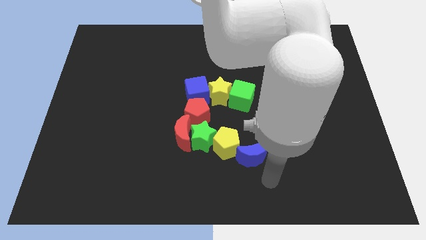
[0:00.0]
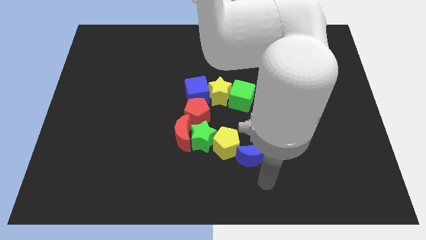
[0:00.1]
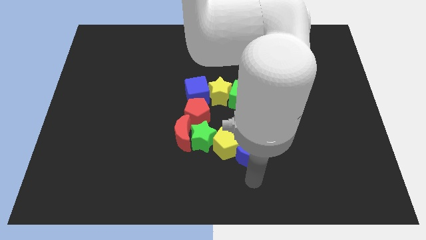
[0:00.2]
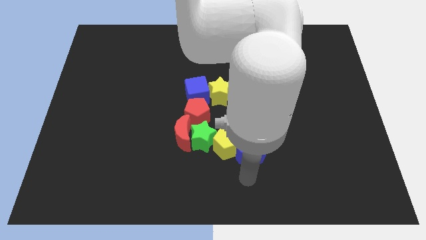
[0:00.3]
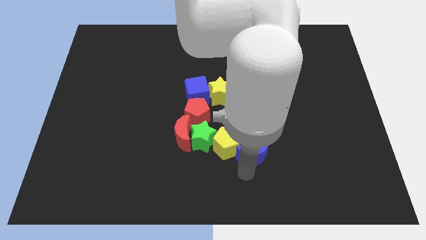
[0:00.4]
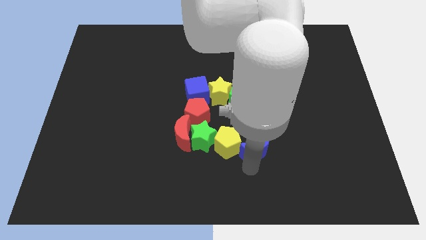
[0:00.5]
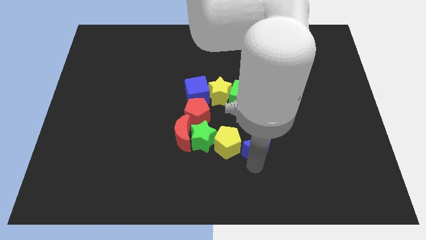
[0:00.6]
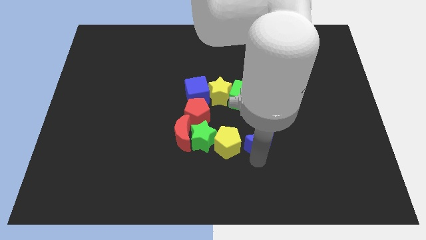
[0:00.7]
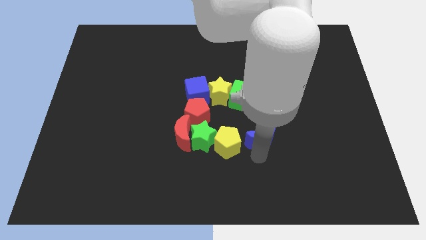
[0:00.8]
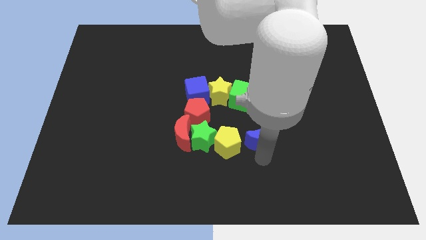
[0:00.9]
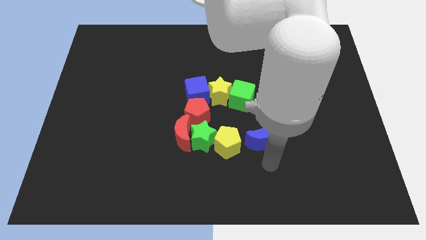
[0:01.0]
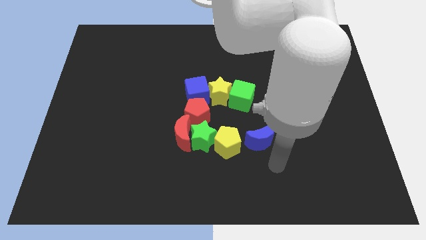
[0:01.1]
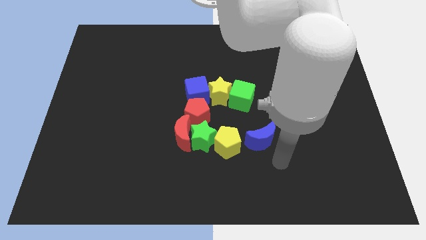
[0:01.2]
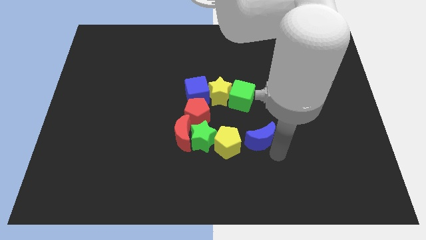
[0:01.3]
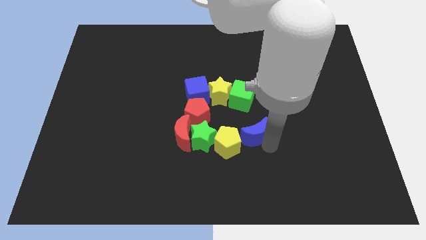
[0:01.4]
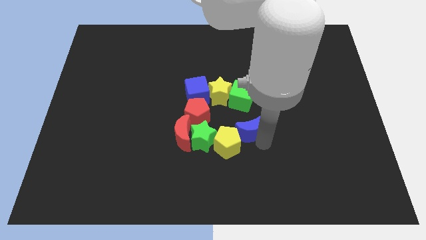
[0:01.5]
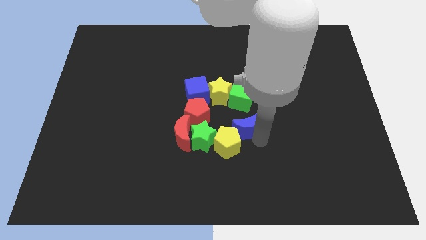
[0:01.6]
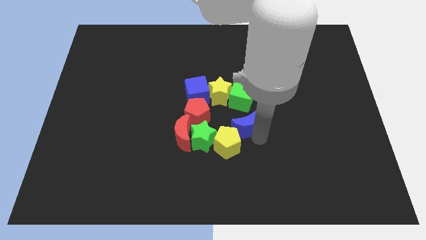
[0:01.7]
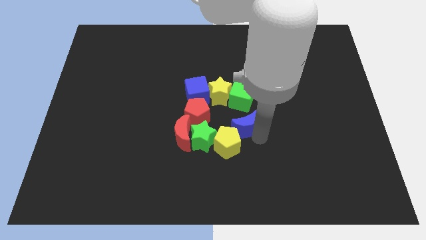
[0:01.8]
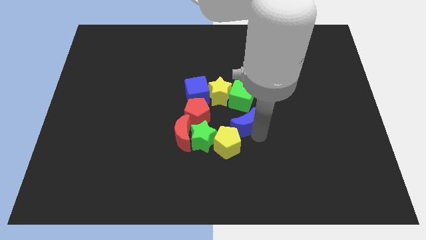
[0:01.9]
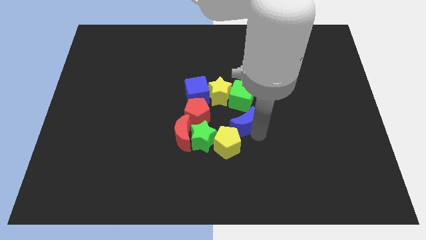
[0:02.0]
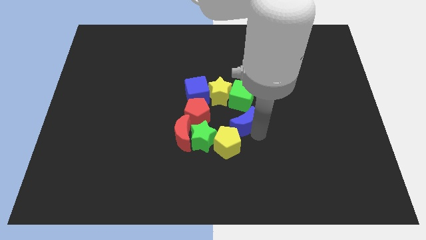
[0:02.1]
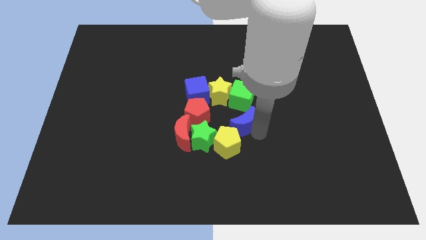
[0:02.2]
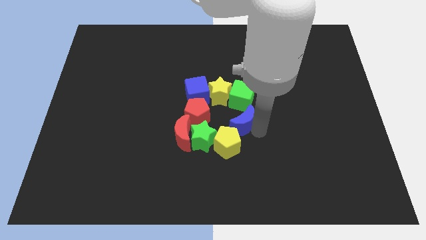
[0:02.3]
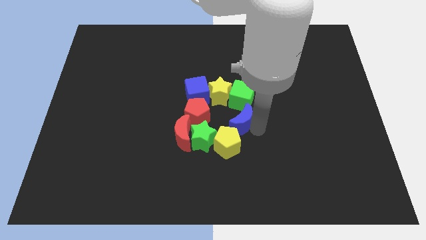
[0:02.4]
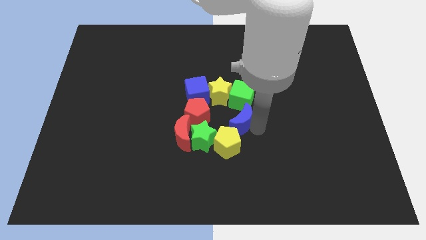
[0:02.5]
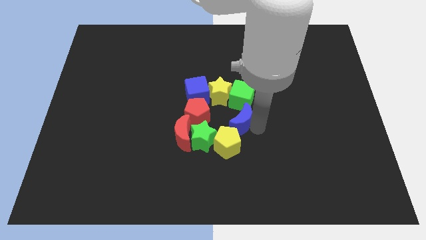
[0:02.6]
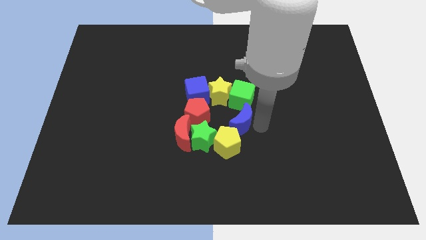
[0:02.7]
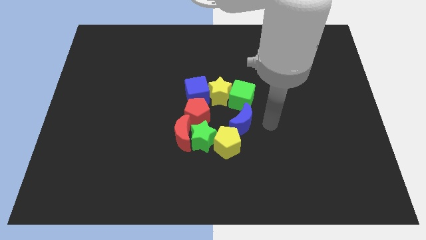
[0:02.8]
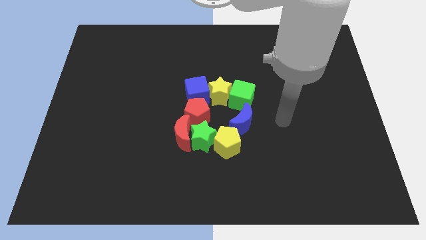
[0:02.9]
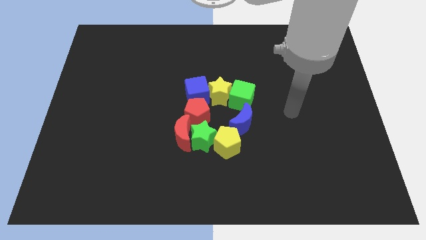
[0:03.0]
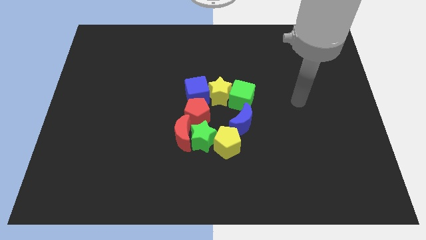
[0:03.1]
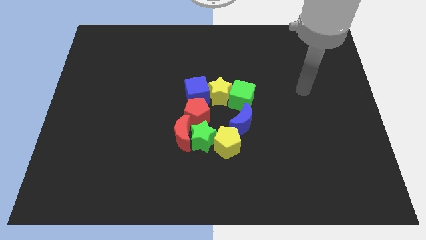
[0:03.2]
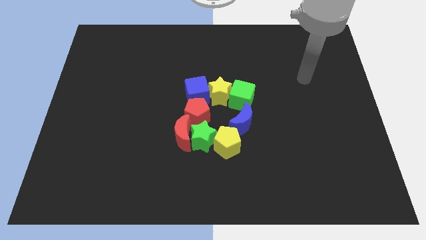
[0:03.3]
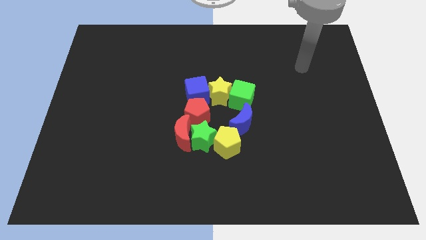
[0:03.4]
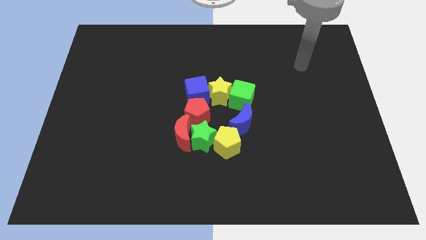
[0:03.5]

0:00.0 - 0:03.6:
push the blue moon down to the green cube

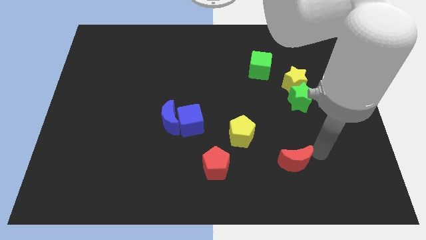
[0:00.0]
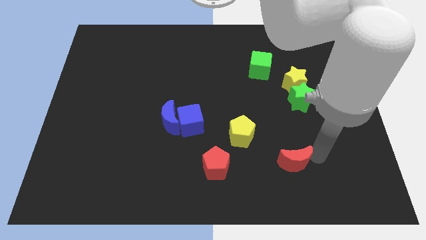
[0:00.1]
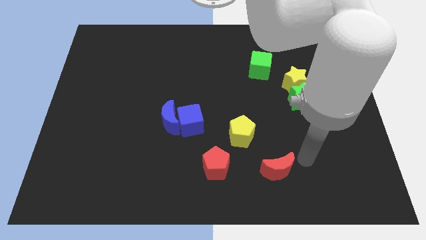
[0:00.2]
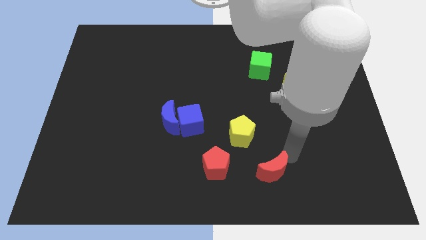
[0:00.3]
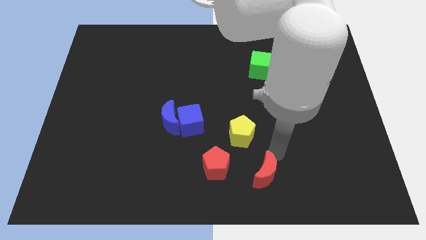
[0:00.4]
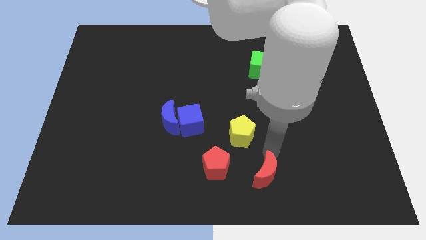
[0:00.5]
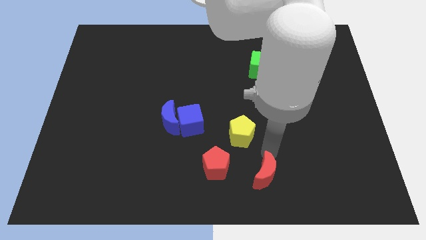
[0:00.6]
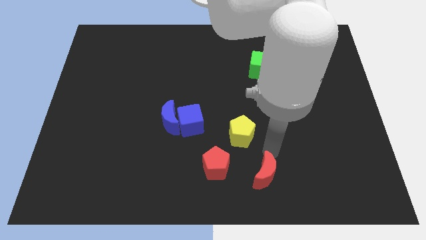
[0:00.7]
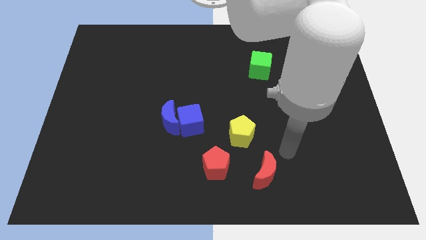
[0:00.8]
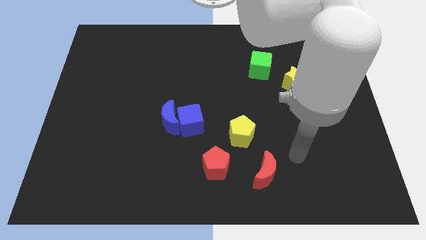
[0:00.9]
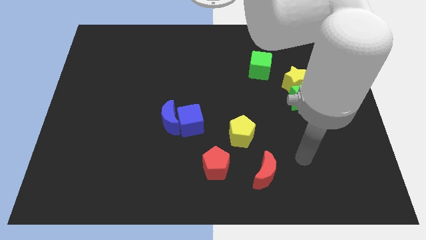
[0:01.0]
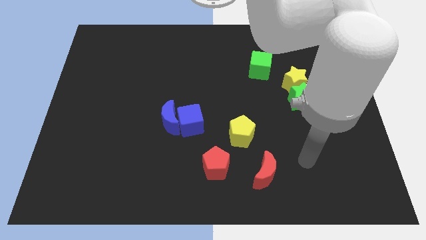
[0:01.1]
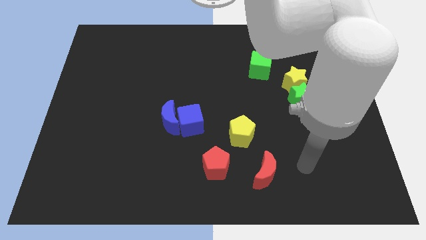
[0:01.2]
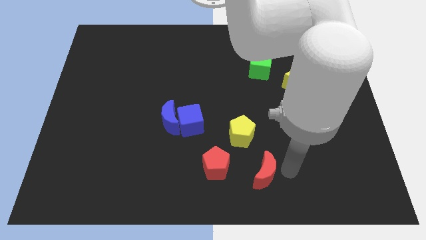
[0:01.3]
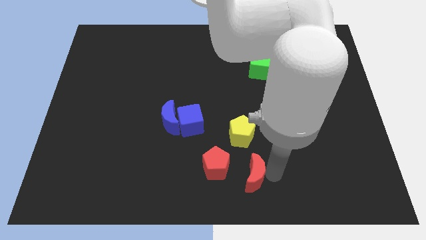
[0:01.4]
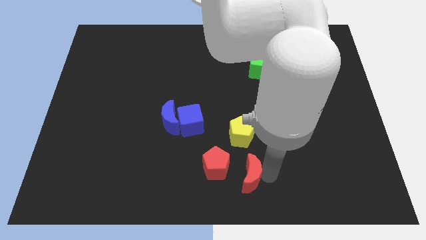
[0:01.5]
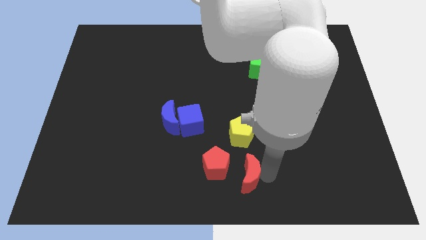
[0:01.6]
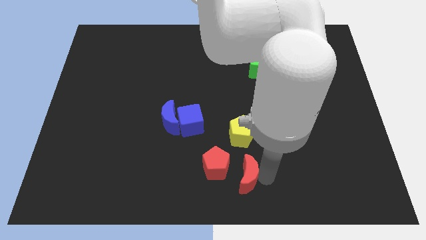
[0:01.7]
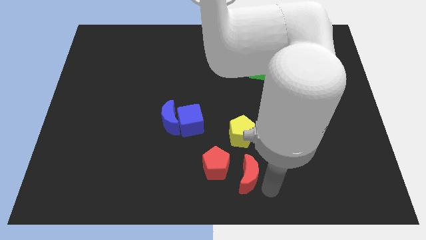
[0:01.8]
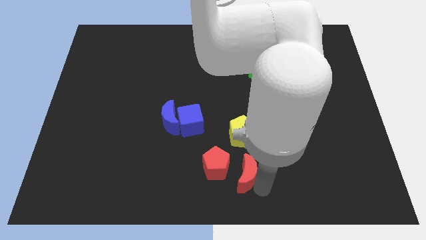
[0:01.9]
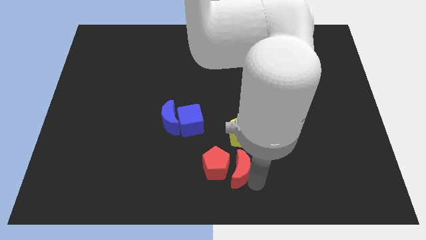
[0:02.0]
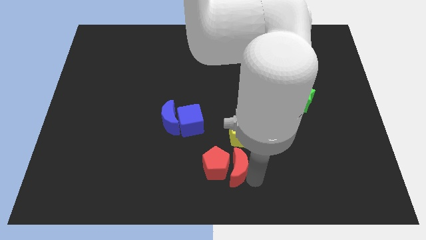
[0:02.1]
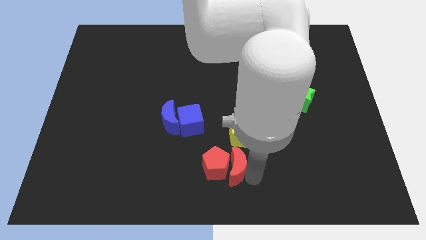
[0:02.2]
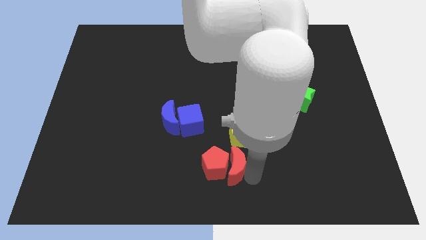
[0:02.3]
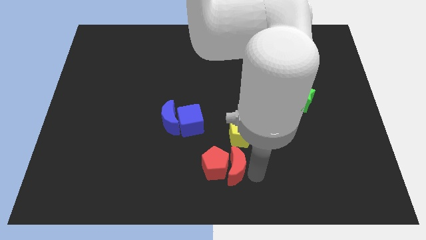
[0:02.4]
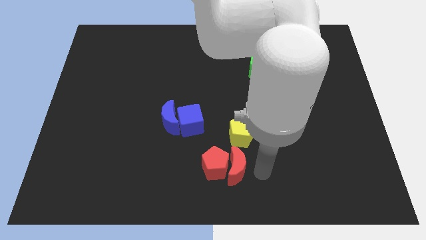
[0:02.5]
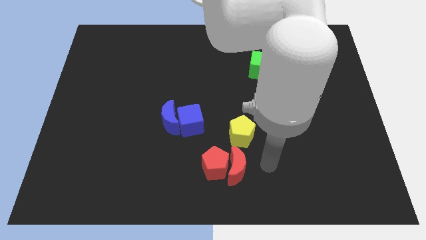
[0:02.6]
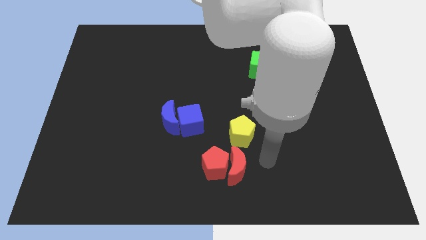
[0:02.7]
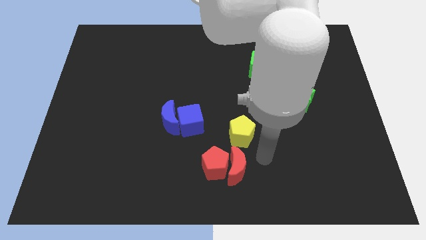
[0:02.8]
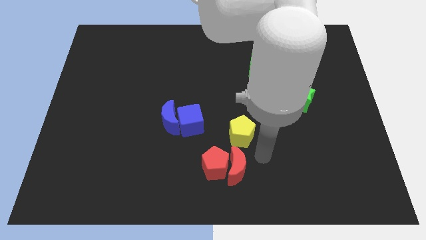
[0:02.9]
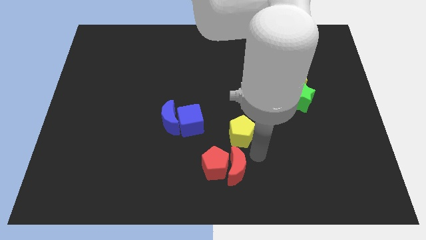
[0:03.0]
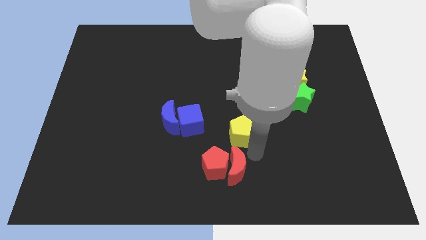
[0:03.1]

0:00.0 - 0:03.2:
place red moon right to red pentagon

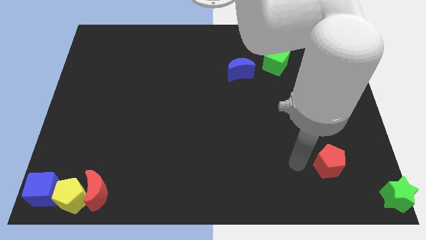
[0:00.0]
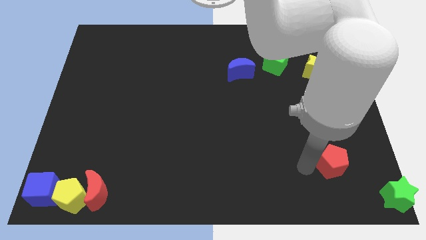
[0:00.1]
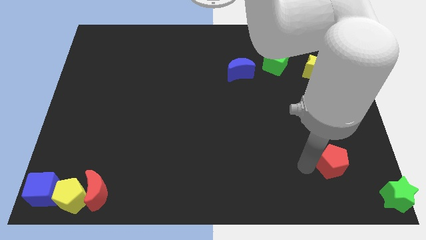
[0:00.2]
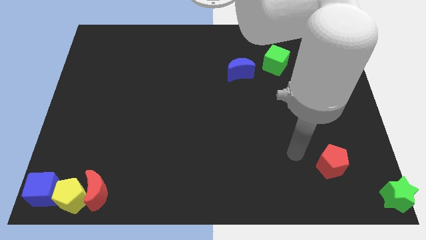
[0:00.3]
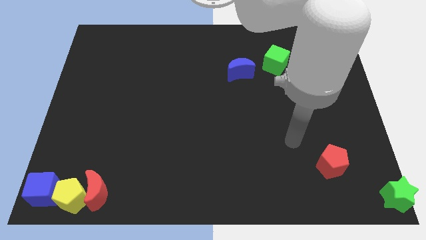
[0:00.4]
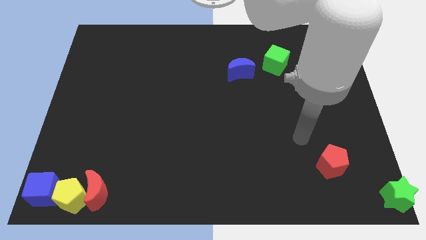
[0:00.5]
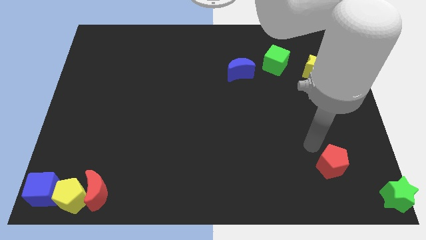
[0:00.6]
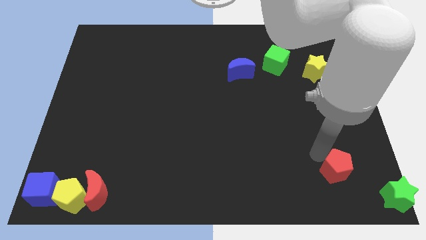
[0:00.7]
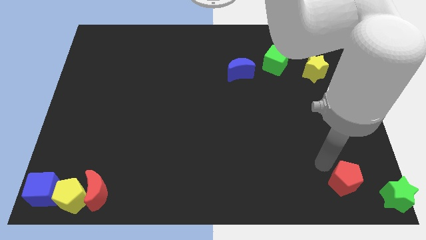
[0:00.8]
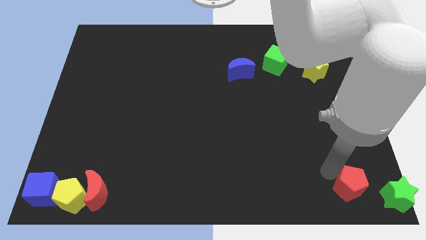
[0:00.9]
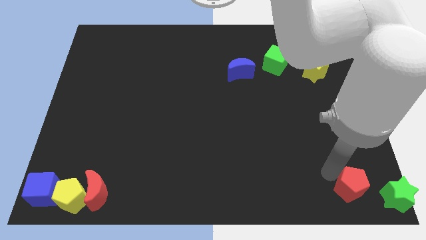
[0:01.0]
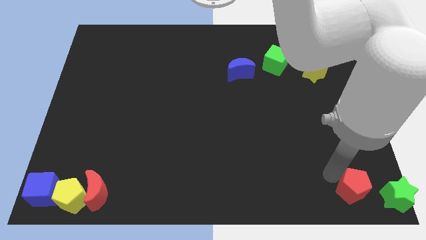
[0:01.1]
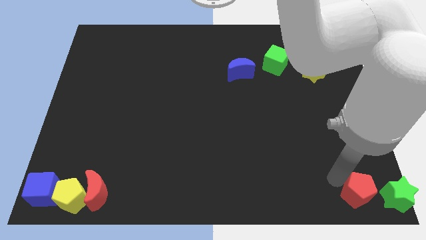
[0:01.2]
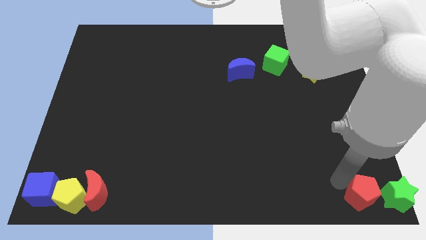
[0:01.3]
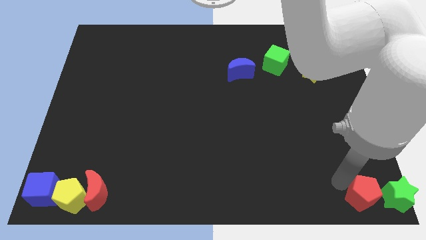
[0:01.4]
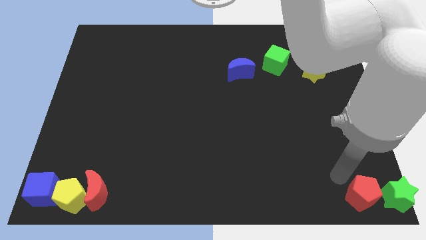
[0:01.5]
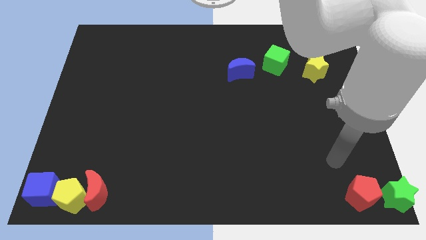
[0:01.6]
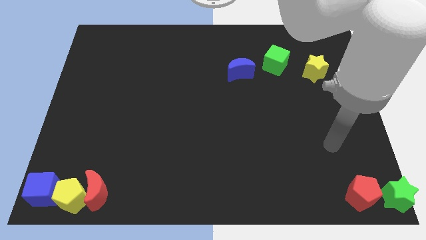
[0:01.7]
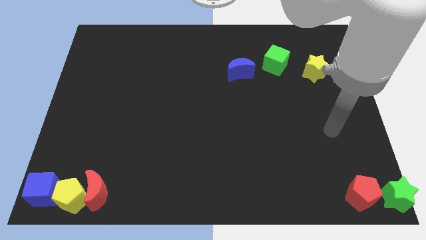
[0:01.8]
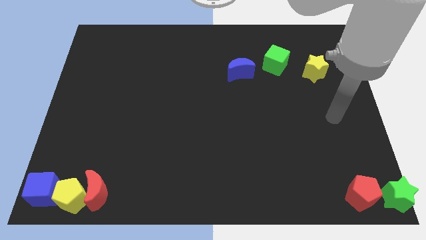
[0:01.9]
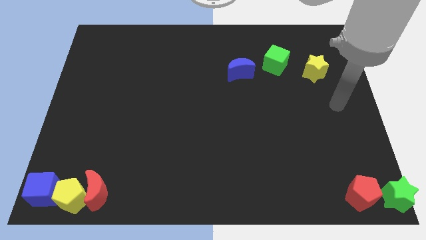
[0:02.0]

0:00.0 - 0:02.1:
place the red pentagon left to the green star
